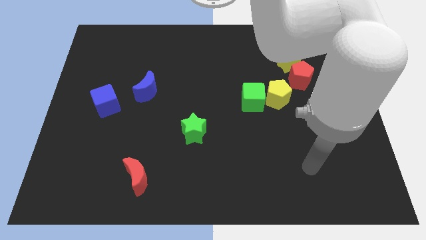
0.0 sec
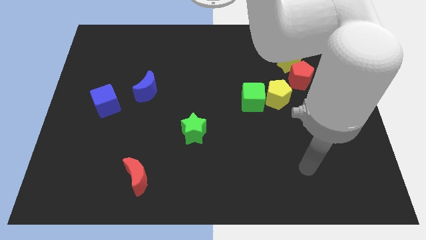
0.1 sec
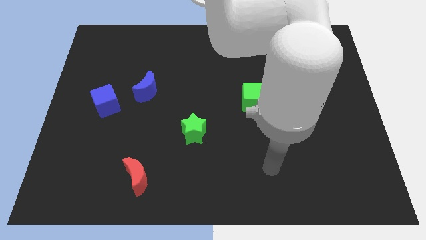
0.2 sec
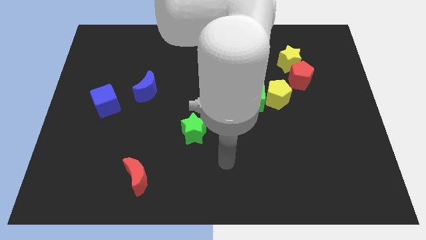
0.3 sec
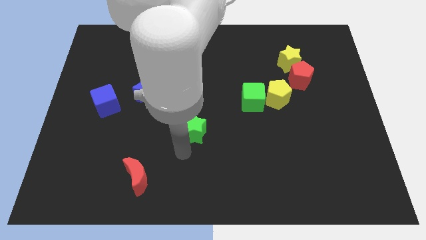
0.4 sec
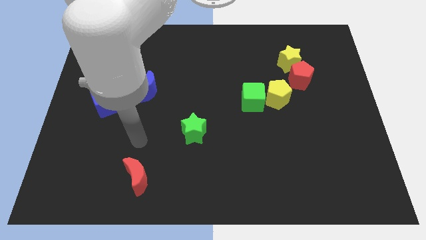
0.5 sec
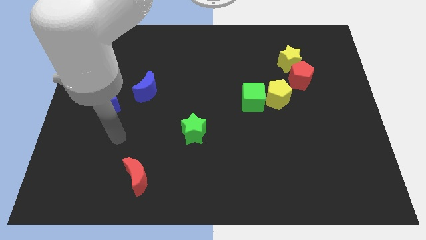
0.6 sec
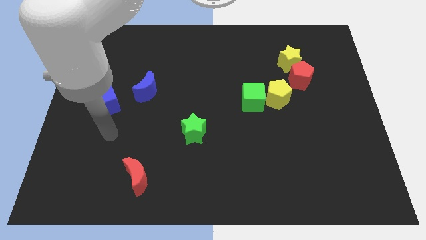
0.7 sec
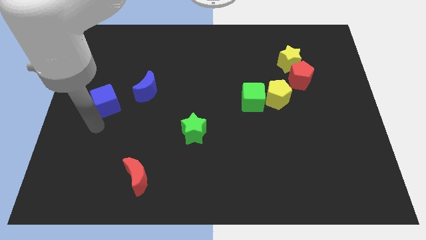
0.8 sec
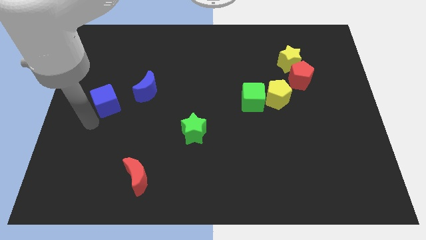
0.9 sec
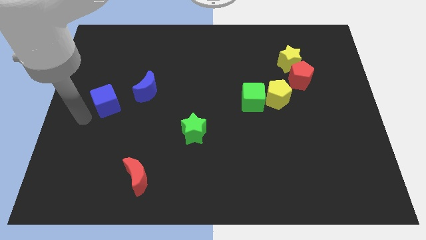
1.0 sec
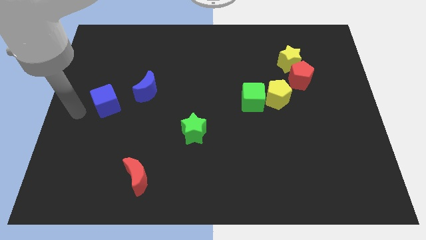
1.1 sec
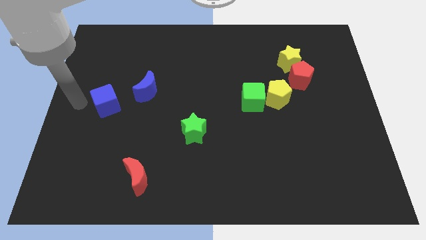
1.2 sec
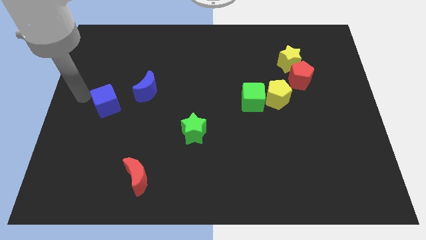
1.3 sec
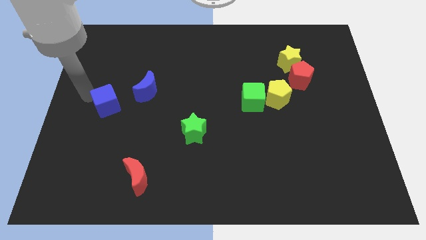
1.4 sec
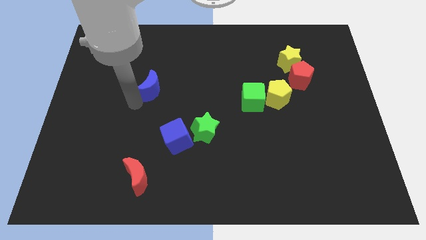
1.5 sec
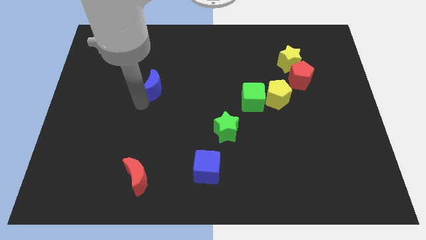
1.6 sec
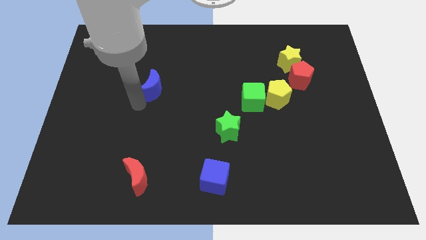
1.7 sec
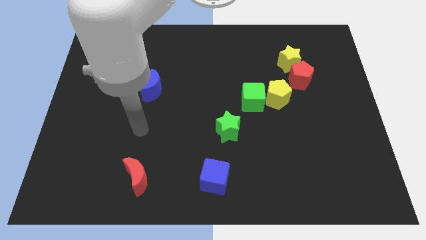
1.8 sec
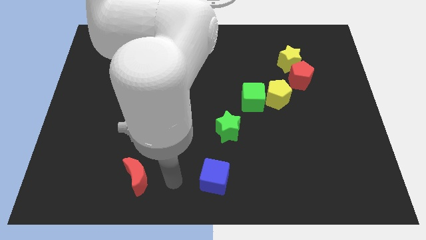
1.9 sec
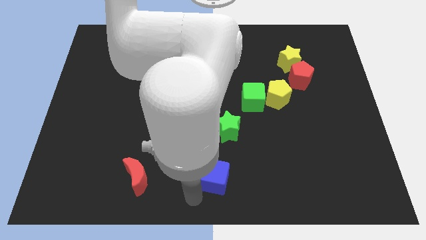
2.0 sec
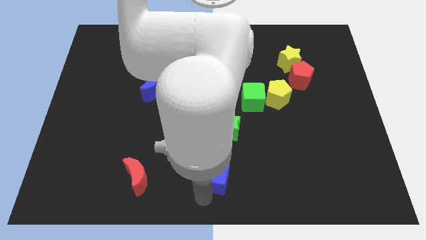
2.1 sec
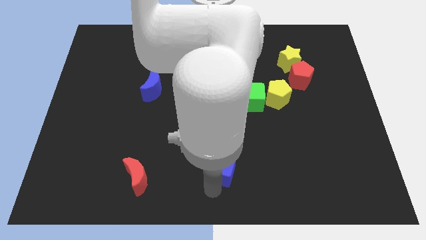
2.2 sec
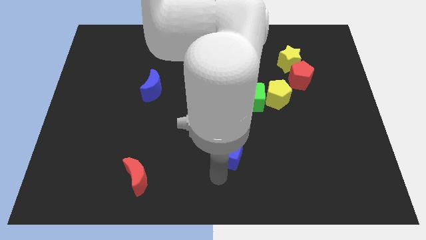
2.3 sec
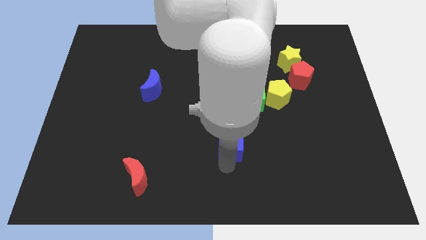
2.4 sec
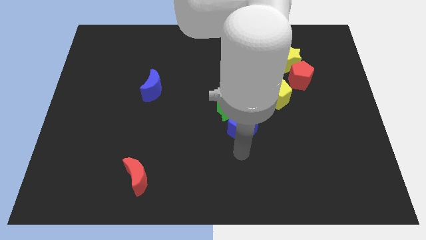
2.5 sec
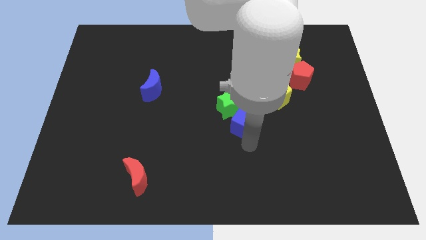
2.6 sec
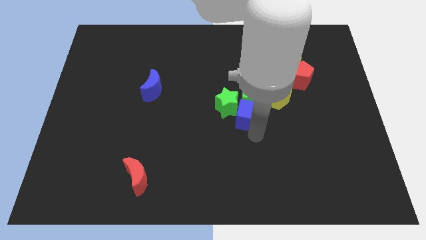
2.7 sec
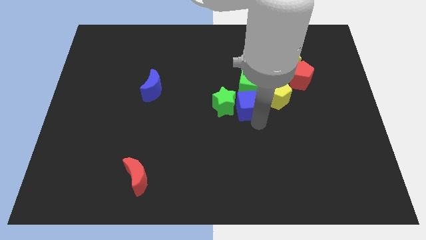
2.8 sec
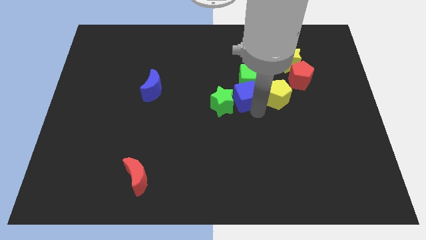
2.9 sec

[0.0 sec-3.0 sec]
slide the blue cube close to the green cube

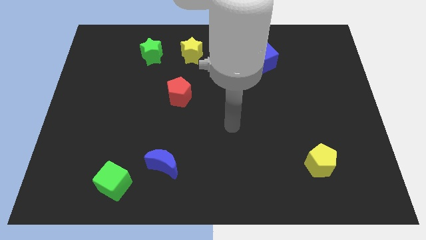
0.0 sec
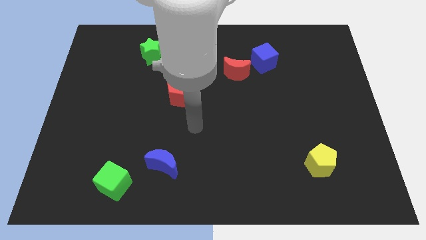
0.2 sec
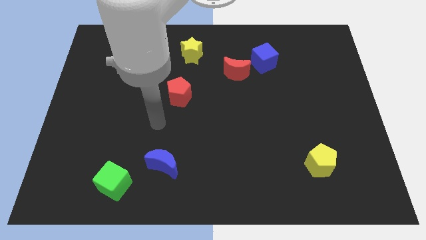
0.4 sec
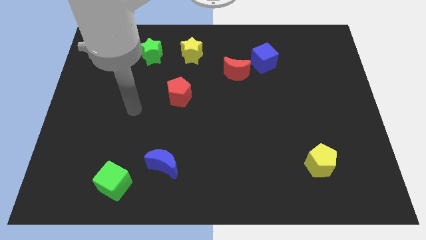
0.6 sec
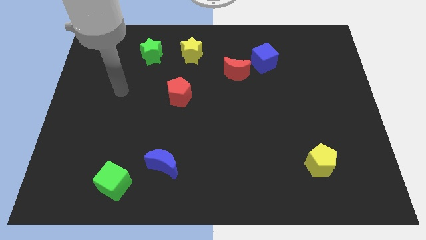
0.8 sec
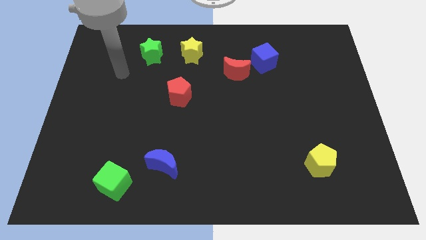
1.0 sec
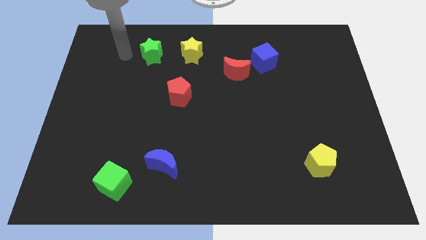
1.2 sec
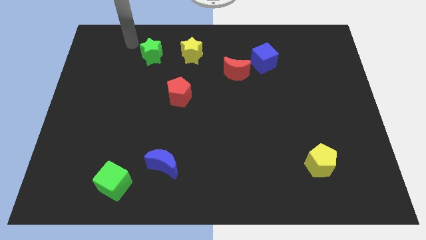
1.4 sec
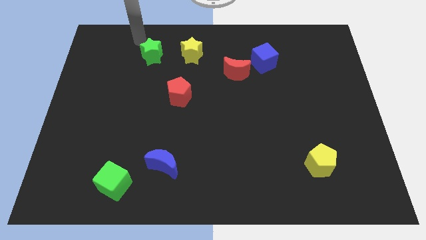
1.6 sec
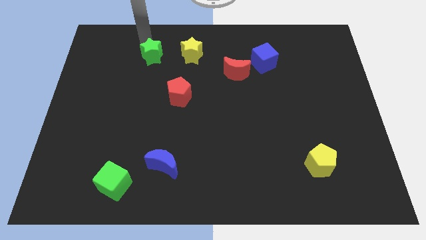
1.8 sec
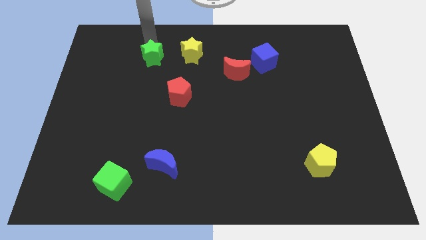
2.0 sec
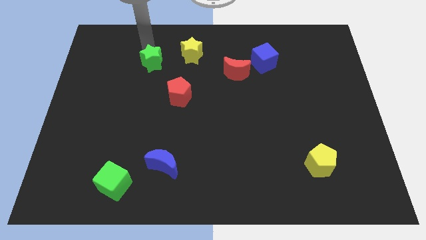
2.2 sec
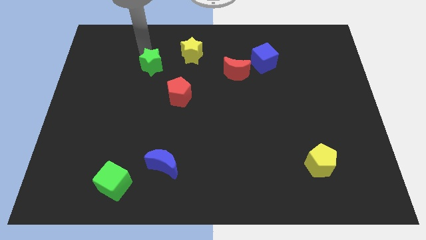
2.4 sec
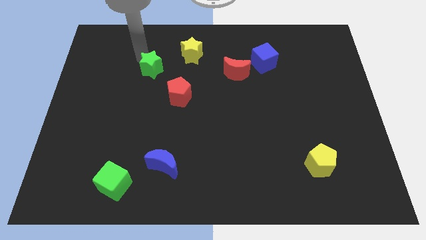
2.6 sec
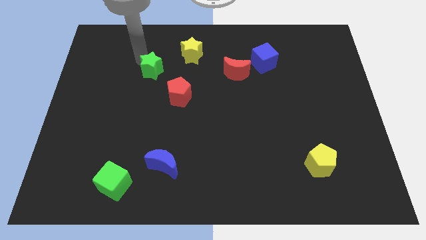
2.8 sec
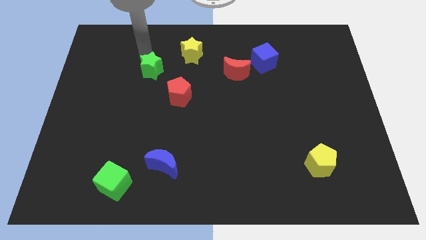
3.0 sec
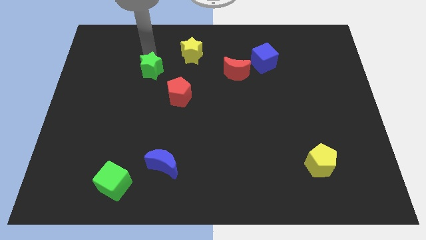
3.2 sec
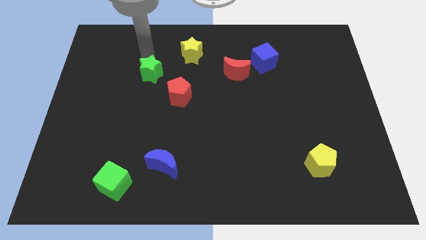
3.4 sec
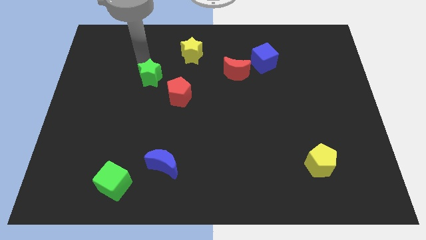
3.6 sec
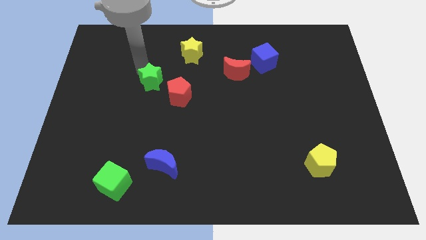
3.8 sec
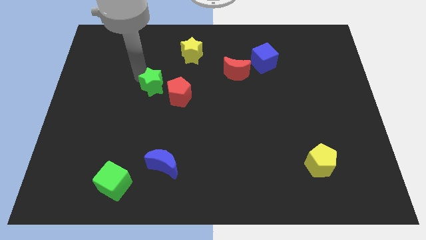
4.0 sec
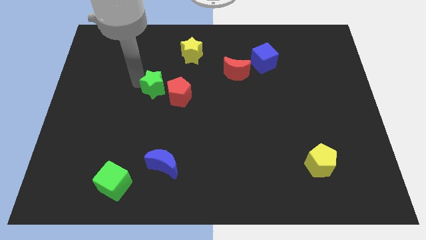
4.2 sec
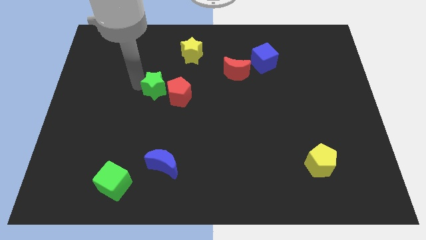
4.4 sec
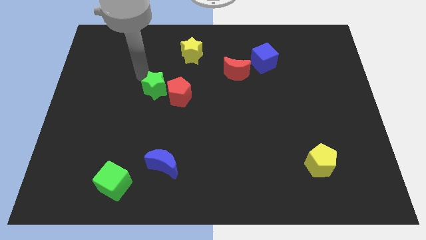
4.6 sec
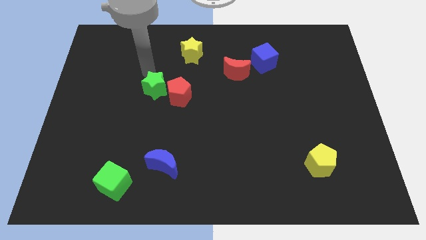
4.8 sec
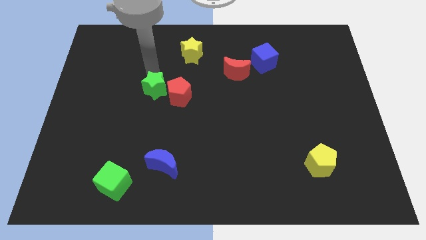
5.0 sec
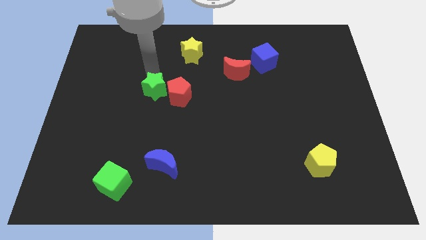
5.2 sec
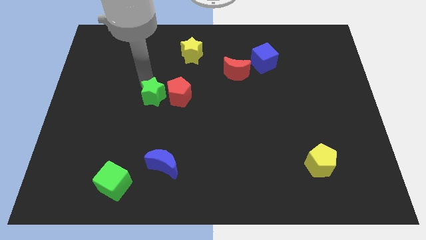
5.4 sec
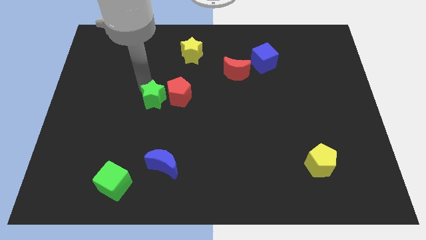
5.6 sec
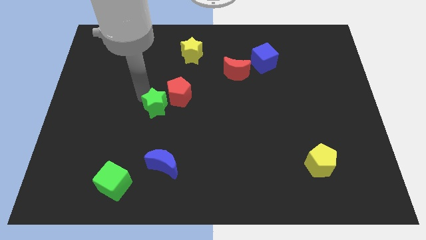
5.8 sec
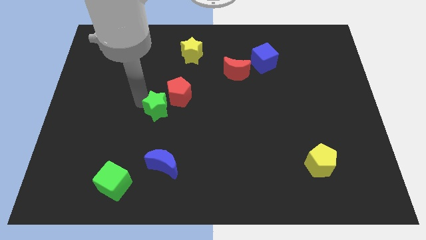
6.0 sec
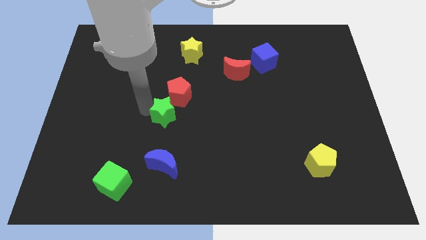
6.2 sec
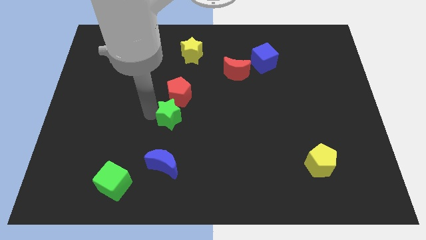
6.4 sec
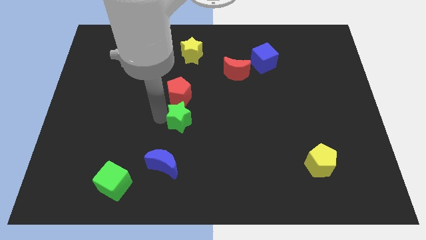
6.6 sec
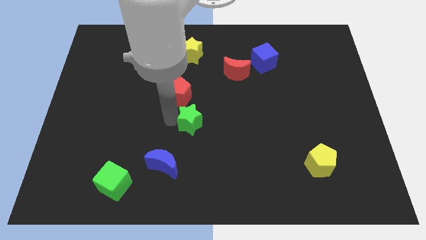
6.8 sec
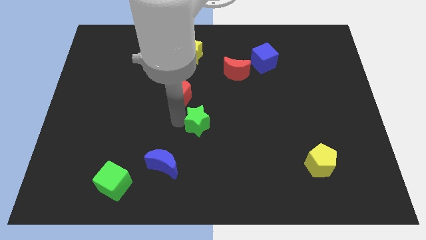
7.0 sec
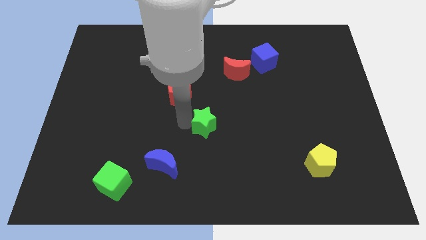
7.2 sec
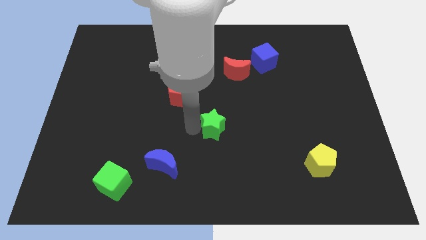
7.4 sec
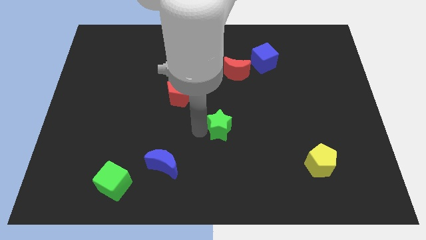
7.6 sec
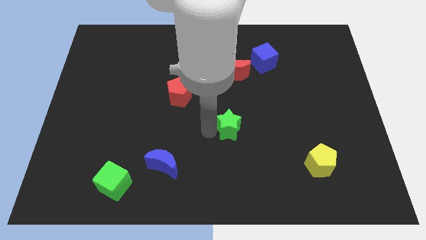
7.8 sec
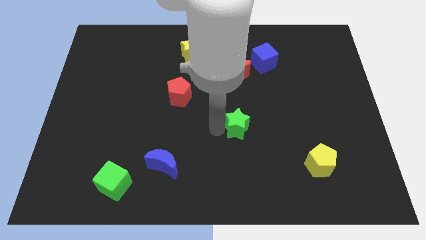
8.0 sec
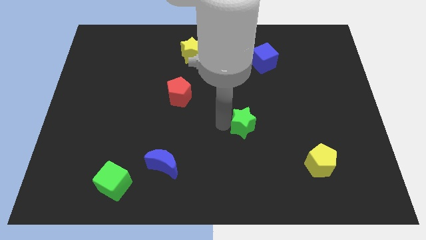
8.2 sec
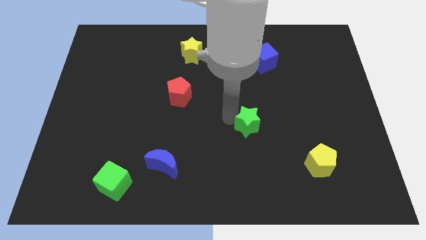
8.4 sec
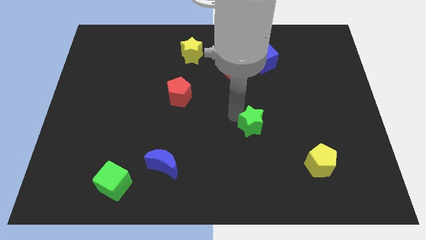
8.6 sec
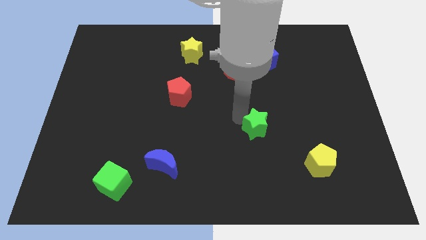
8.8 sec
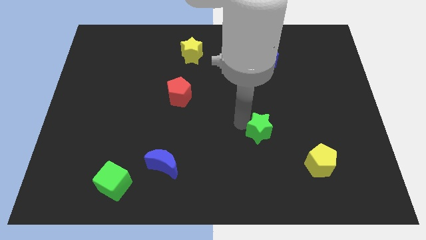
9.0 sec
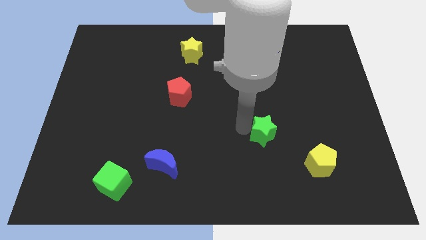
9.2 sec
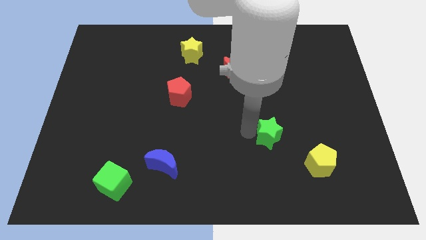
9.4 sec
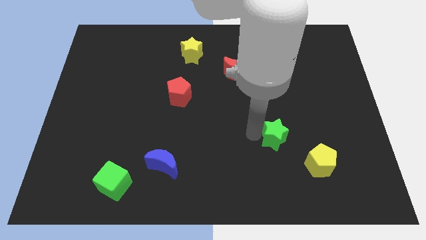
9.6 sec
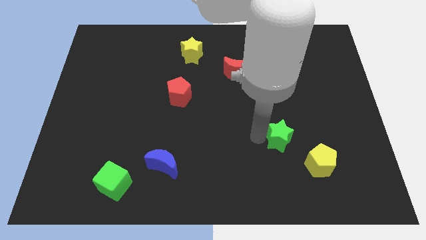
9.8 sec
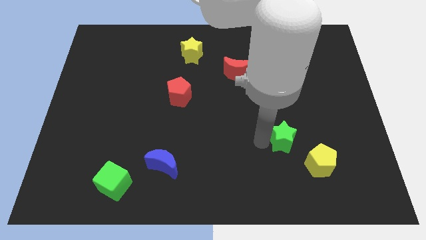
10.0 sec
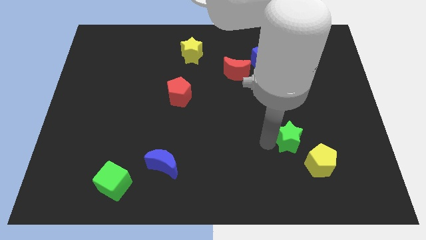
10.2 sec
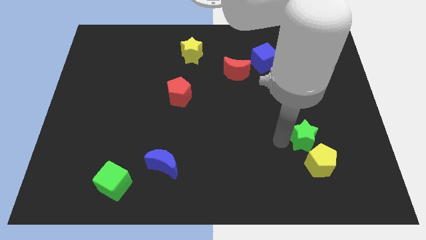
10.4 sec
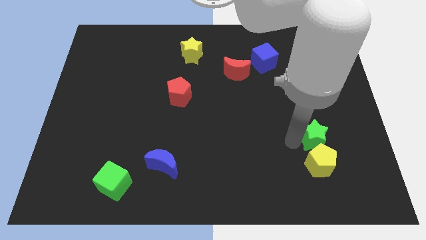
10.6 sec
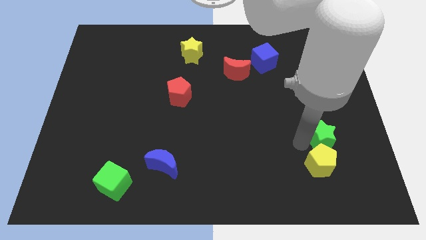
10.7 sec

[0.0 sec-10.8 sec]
push the green star next to the yellow pentagon

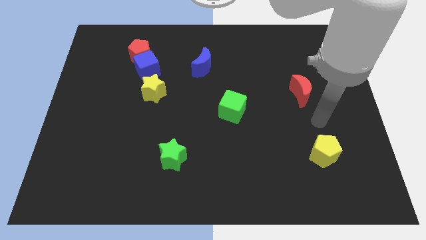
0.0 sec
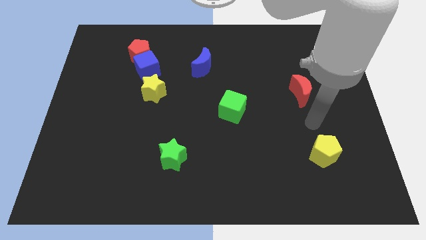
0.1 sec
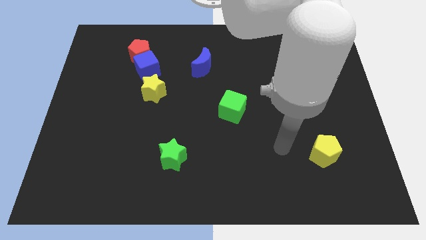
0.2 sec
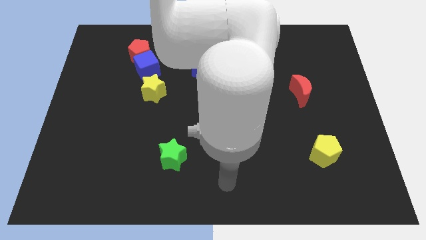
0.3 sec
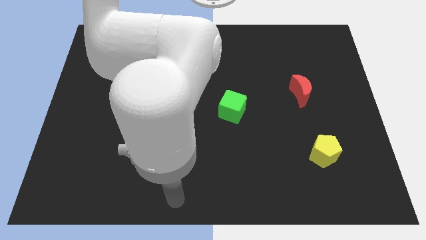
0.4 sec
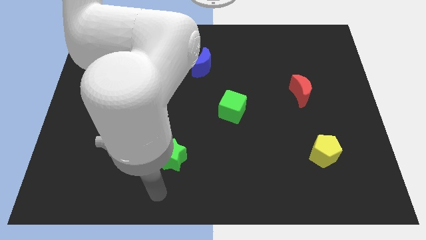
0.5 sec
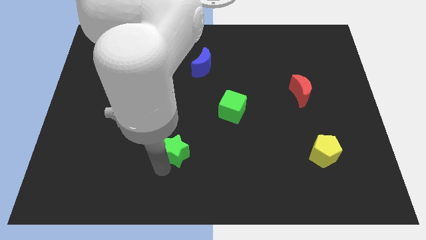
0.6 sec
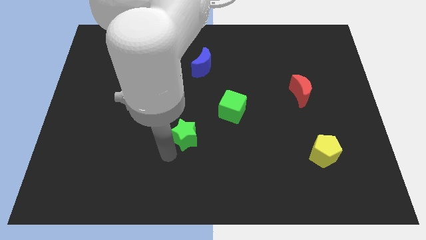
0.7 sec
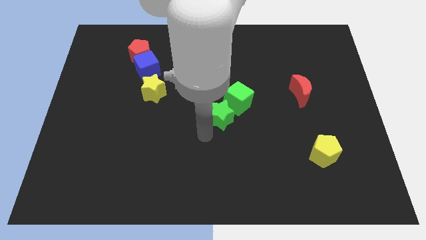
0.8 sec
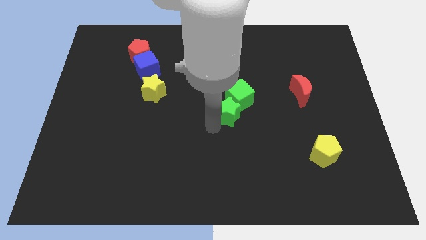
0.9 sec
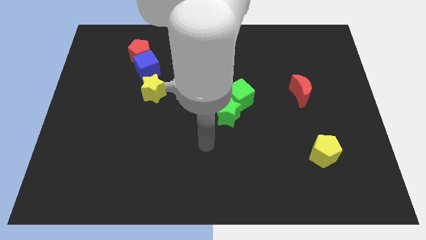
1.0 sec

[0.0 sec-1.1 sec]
slide the green star towards the green cube
